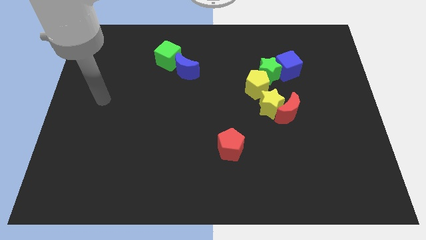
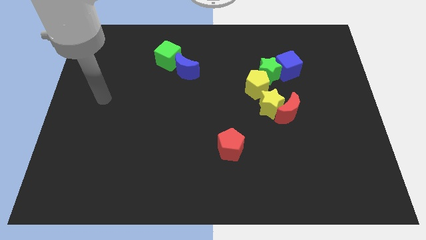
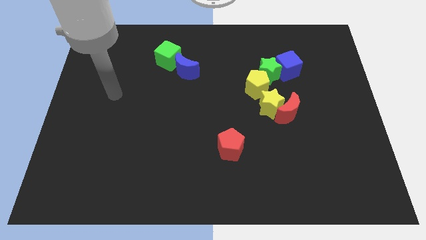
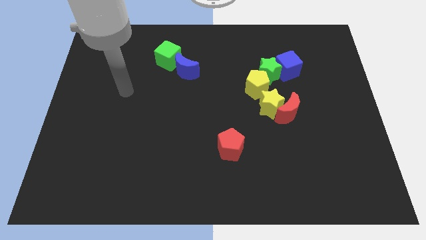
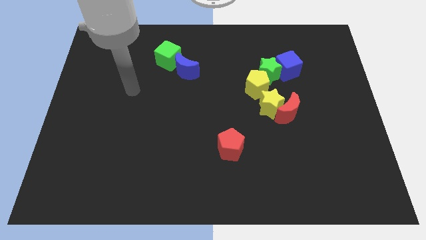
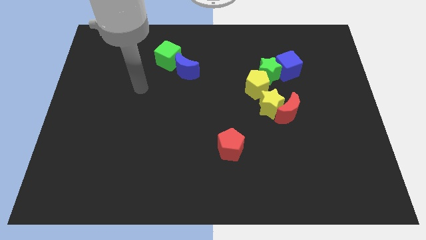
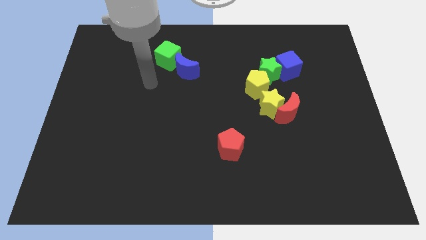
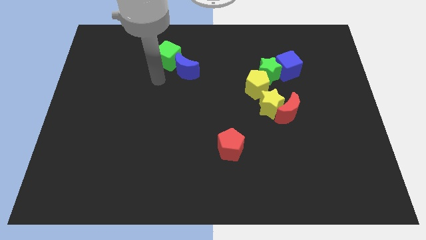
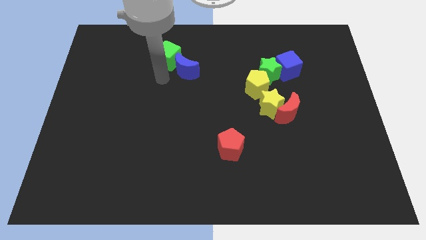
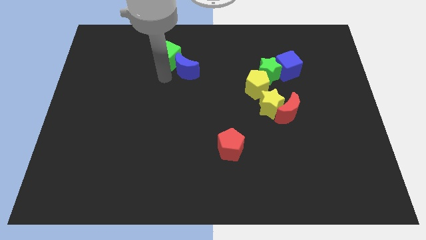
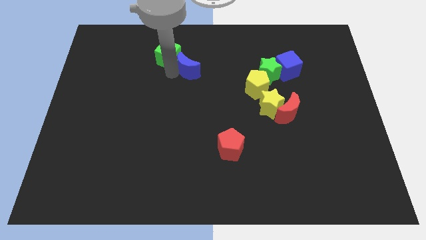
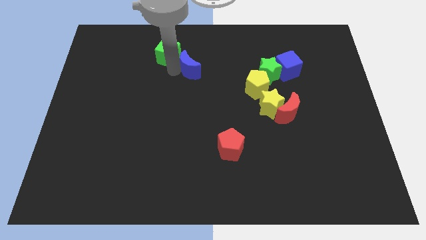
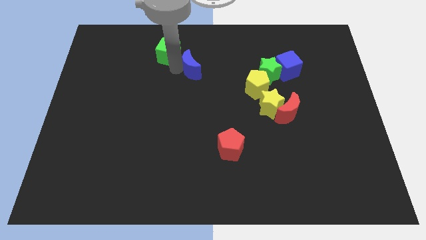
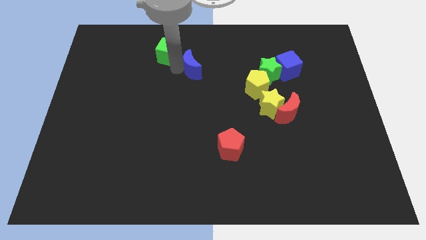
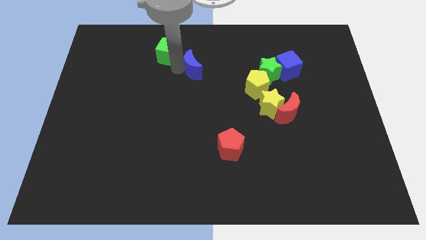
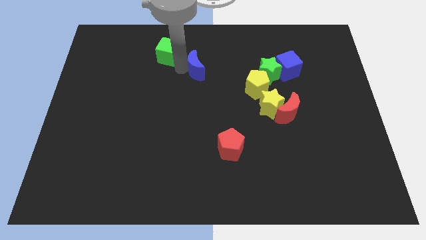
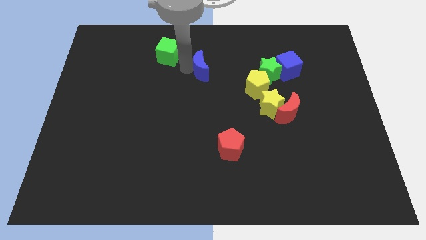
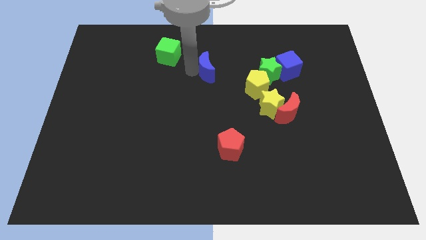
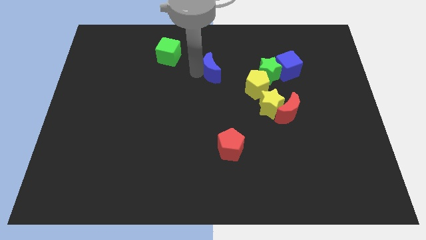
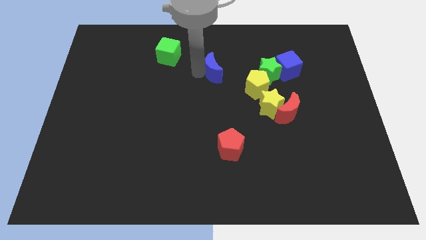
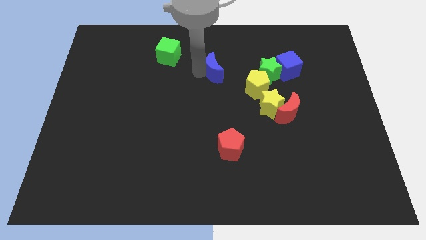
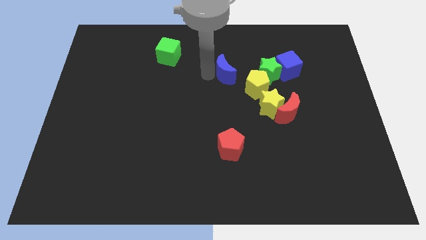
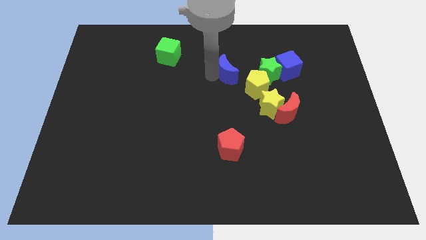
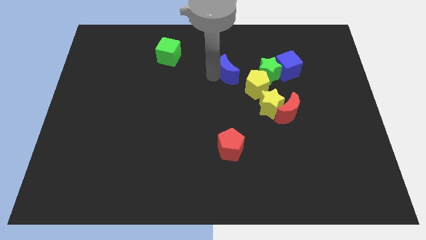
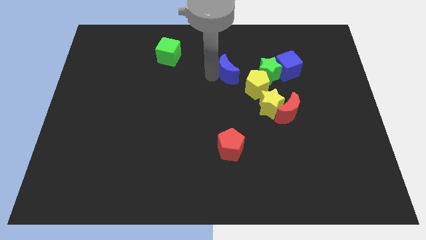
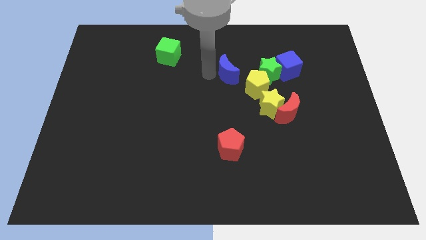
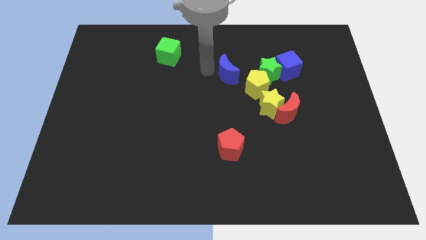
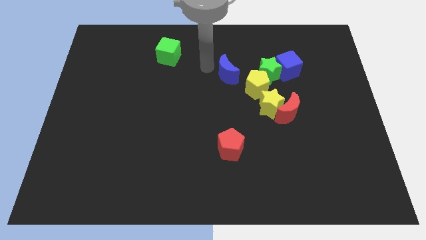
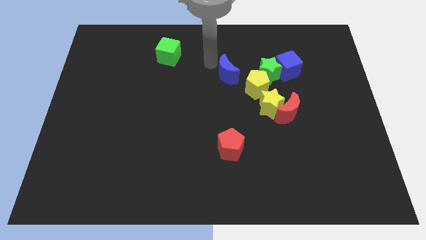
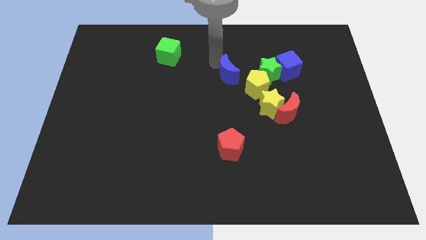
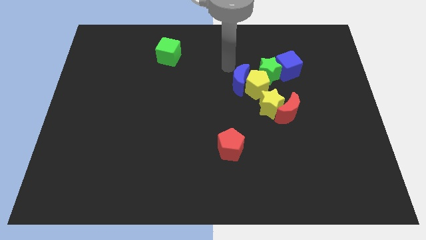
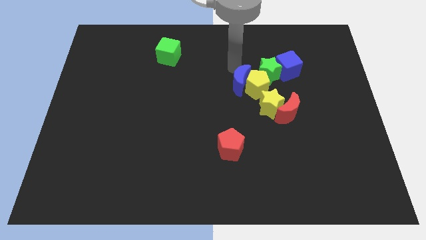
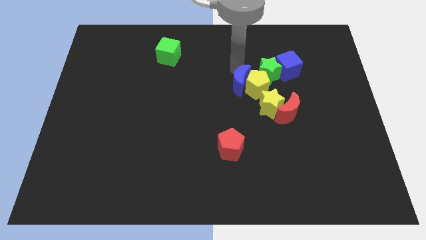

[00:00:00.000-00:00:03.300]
put the blue moon close to the yellow pentagon

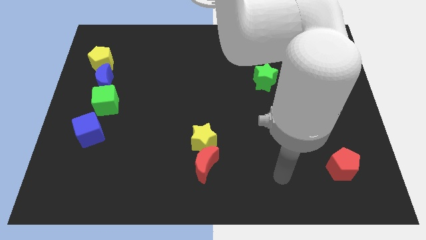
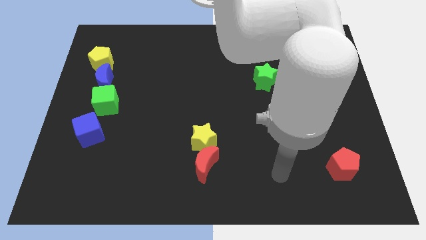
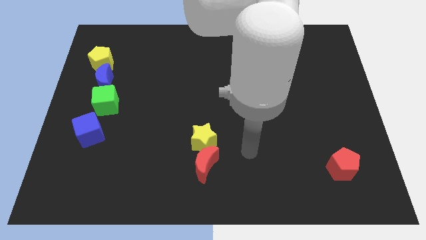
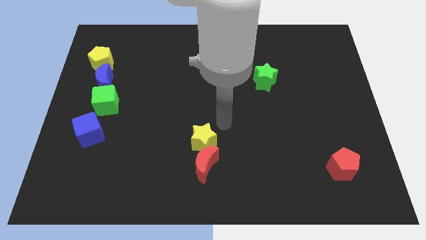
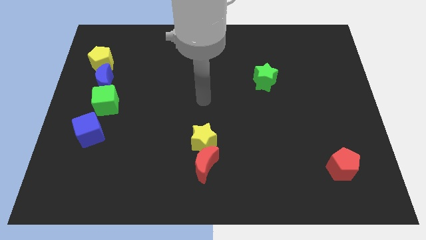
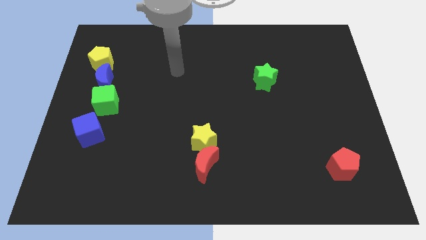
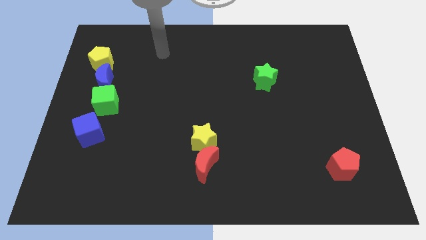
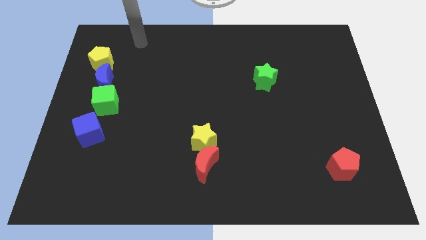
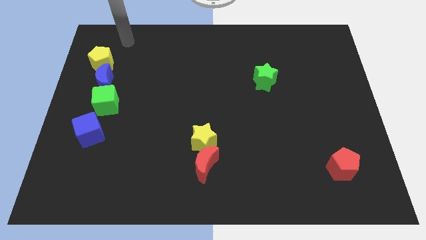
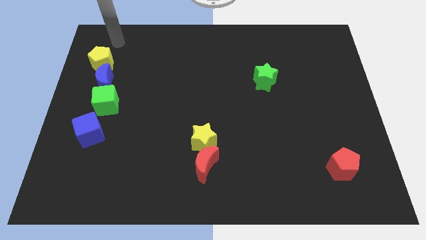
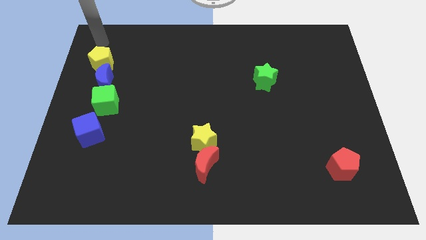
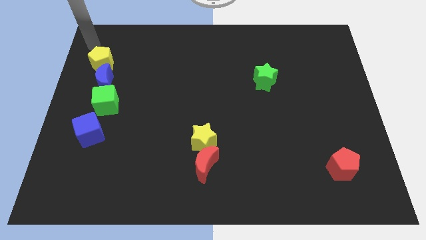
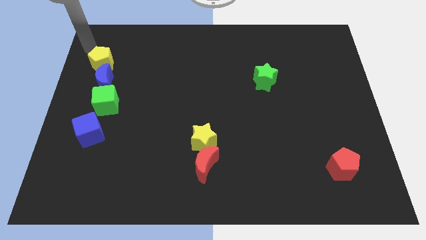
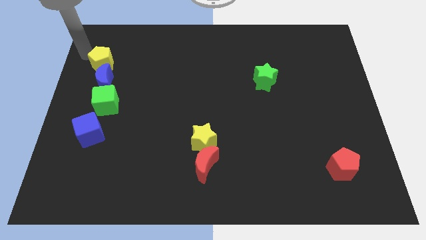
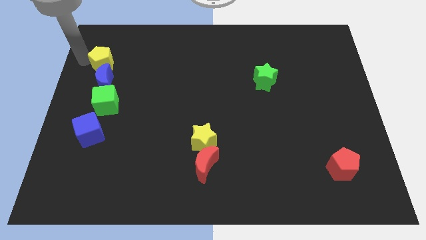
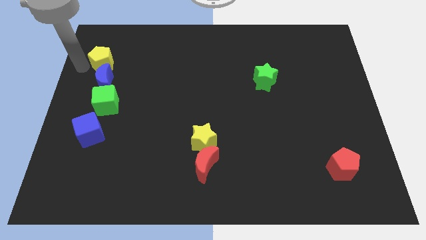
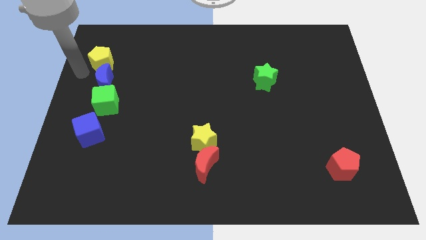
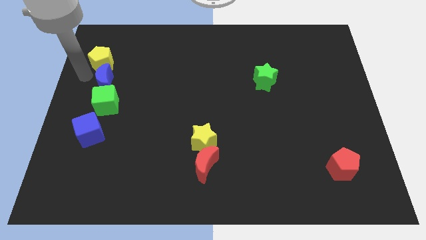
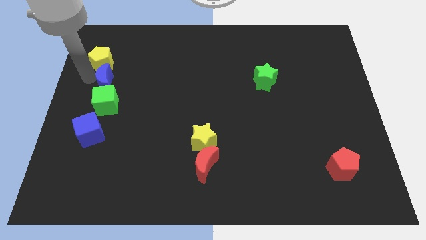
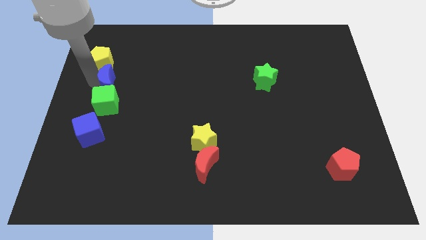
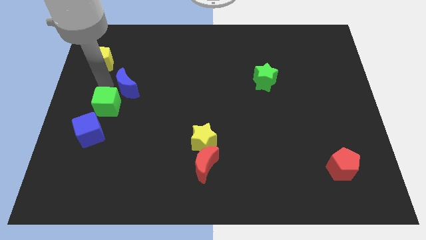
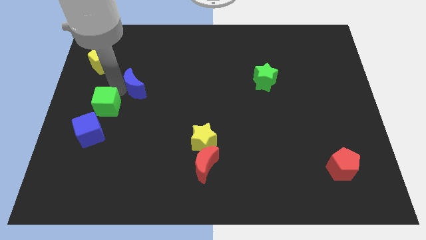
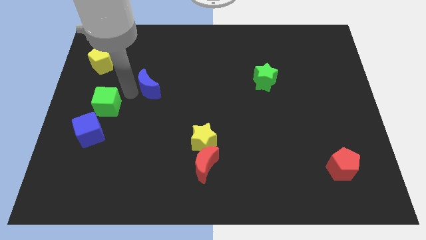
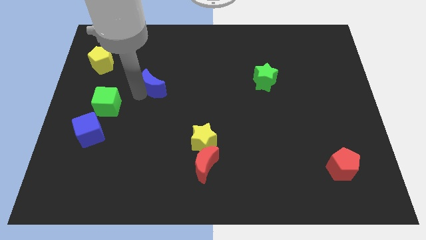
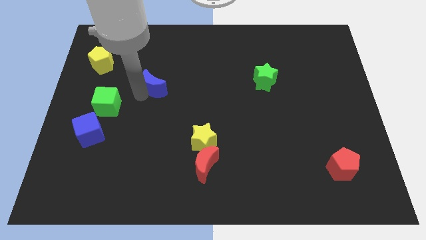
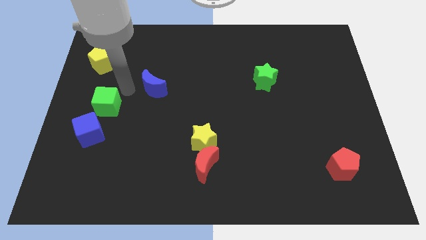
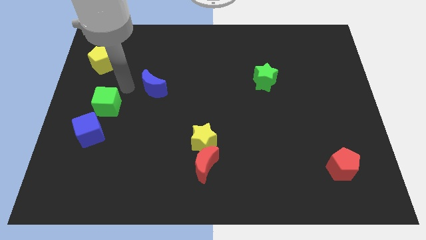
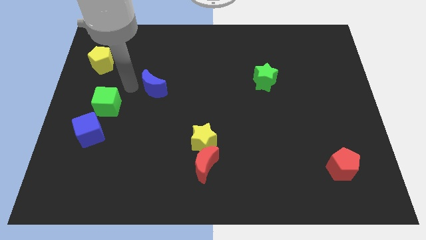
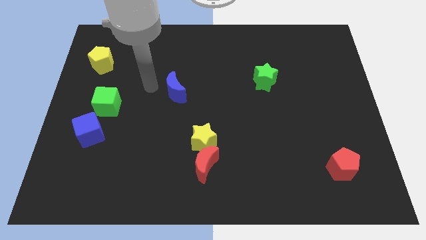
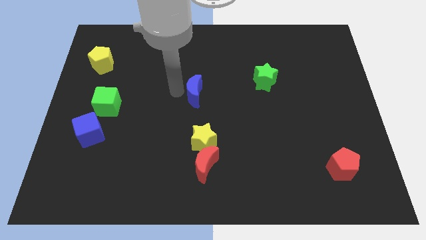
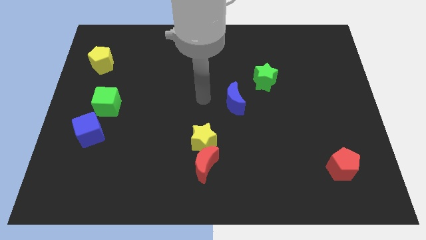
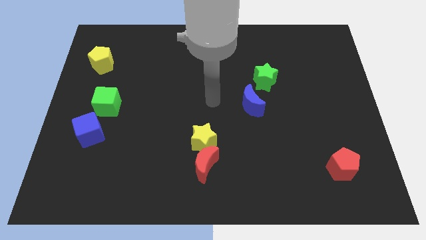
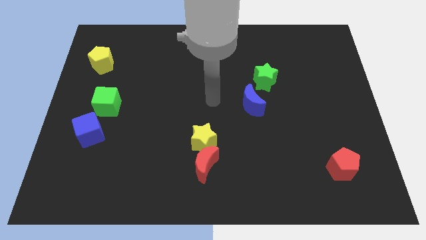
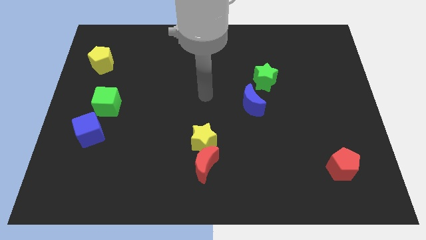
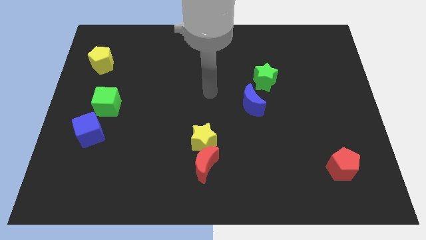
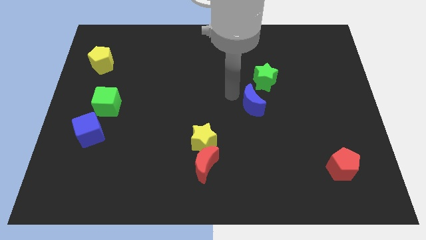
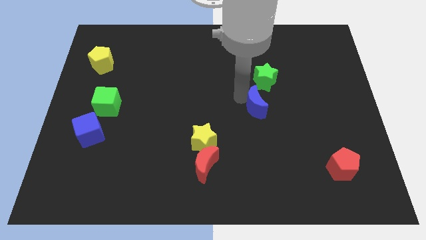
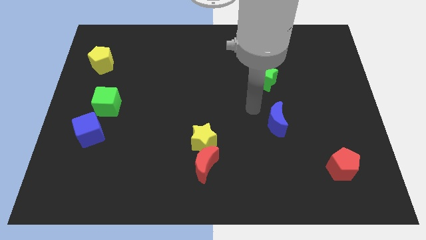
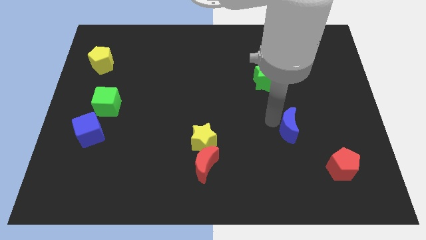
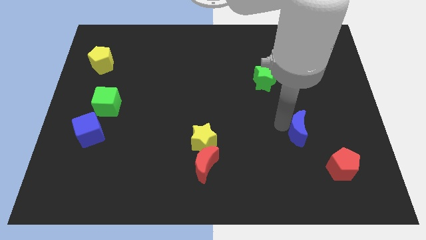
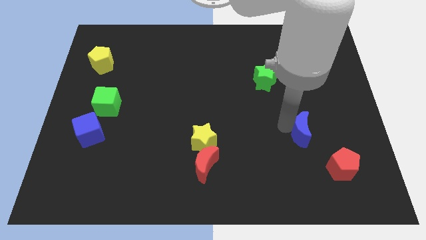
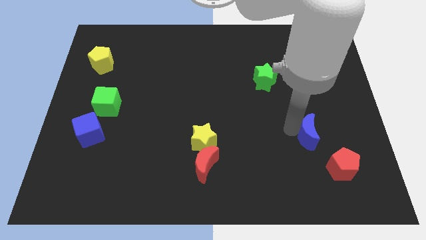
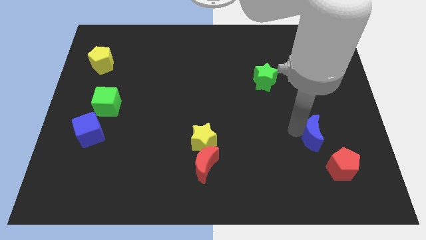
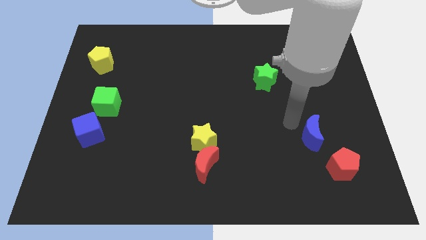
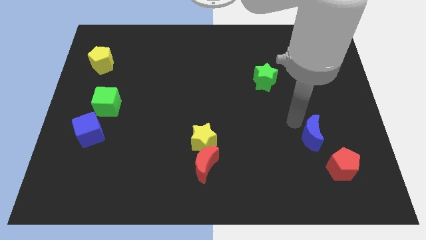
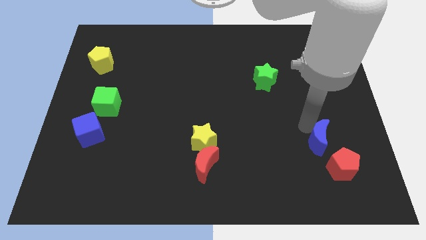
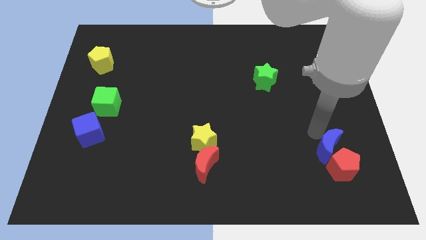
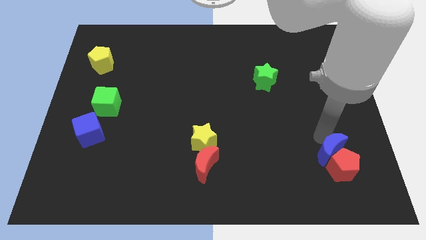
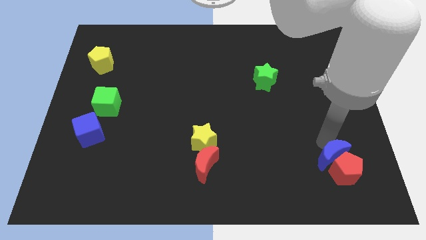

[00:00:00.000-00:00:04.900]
put the blue moon close to the red pentagon

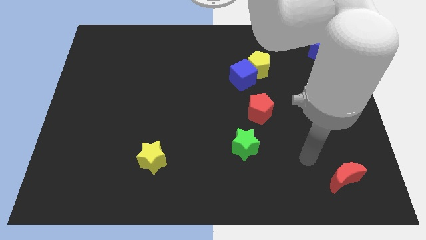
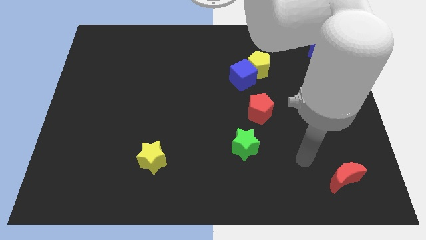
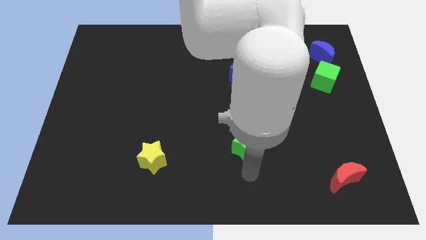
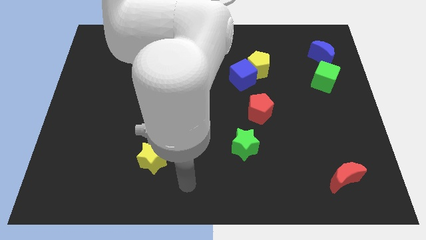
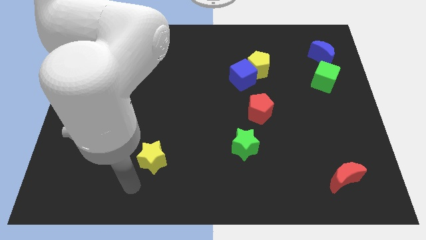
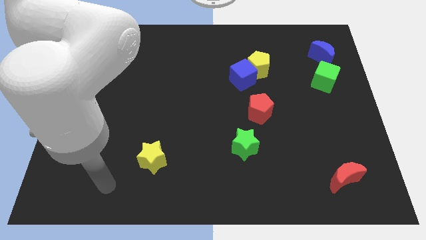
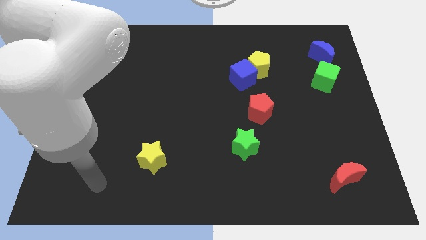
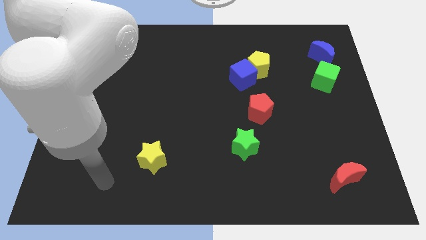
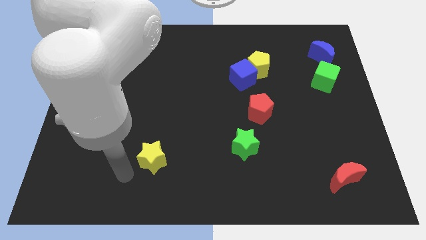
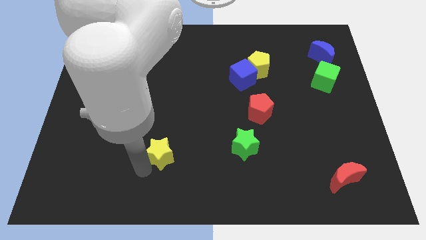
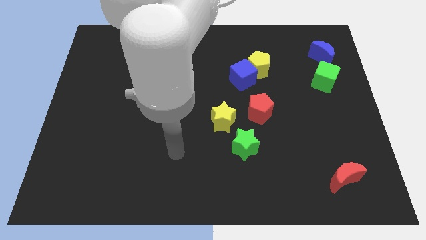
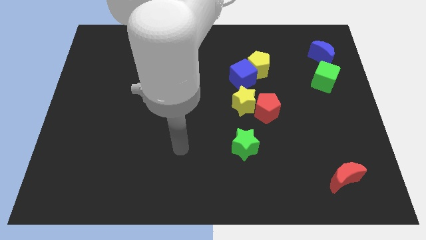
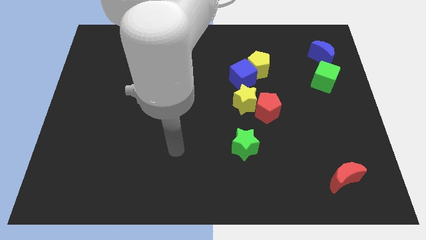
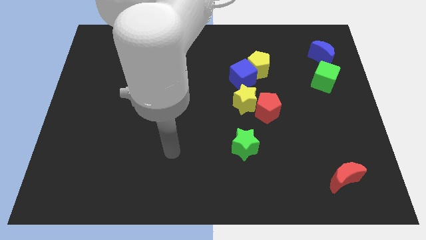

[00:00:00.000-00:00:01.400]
slide the yellow star next to the red pentagon
